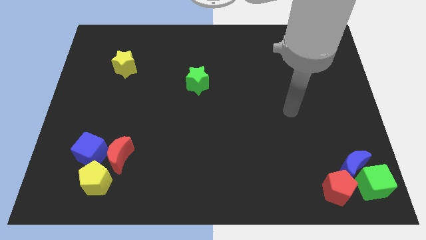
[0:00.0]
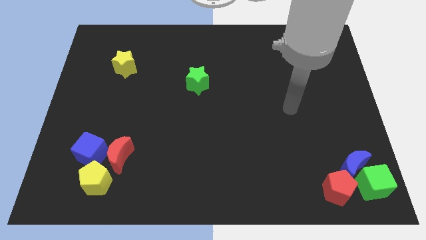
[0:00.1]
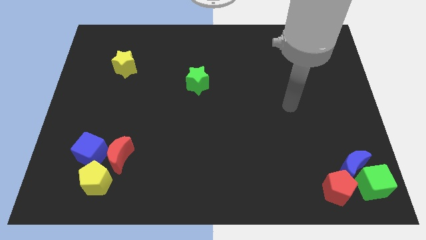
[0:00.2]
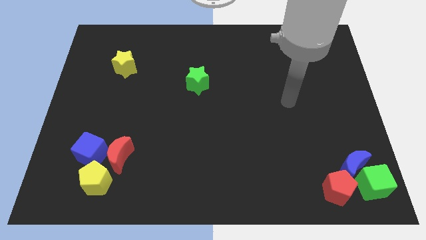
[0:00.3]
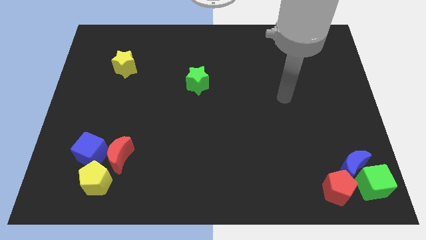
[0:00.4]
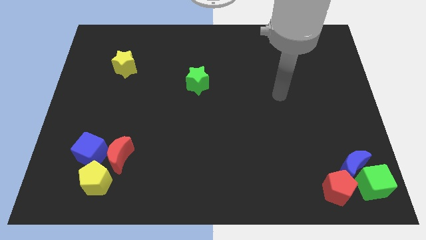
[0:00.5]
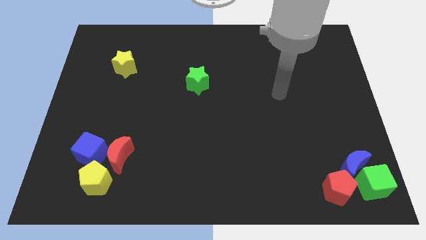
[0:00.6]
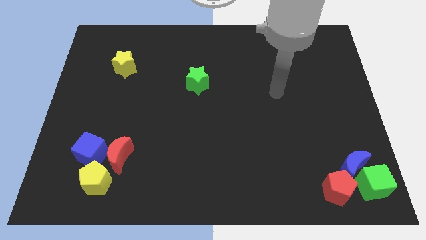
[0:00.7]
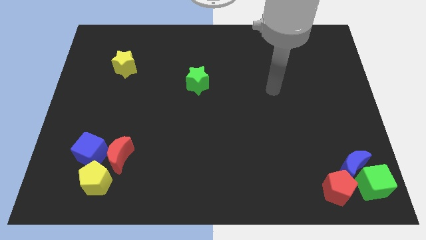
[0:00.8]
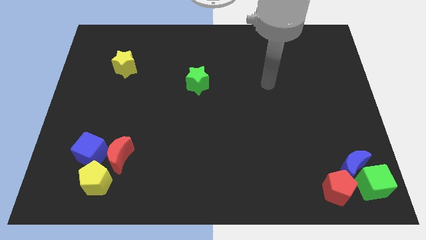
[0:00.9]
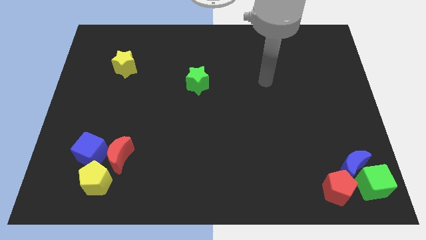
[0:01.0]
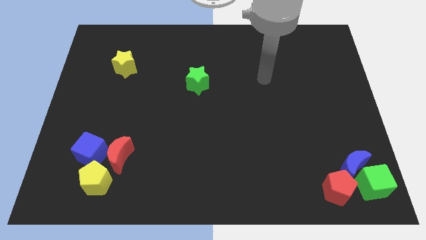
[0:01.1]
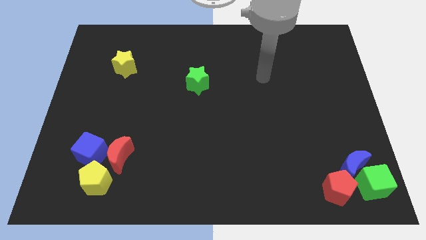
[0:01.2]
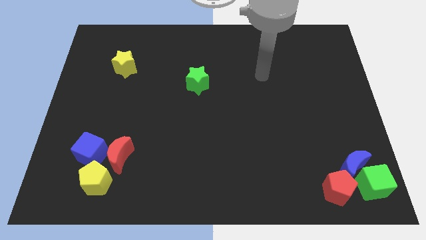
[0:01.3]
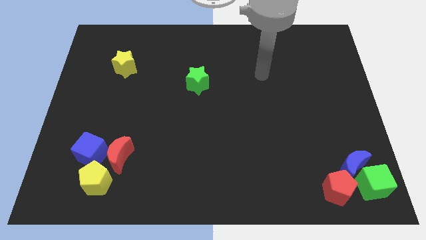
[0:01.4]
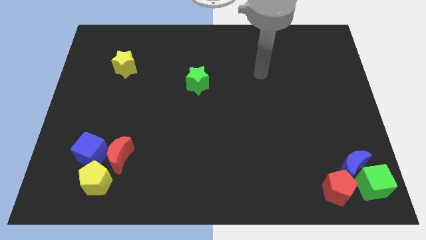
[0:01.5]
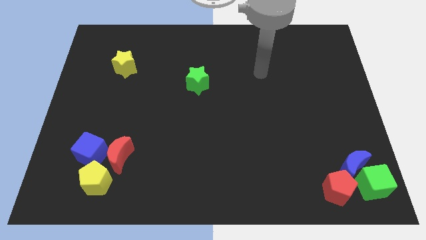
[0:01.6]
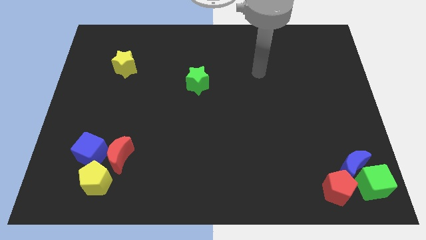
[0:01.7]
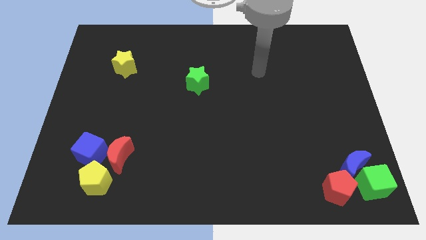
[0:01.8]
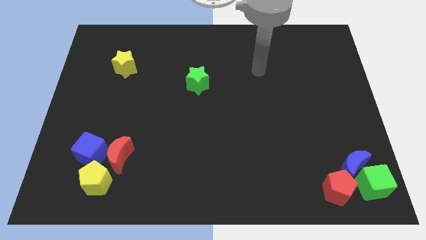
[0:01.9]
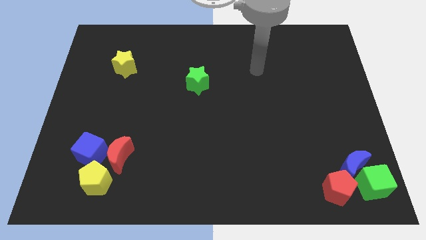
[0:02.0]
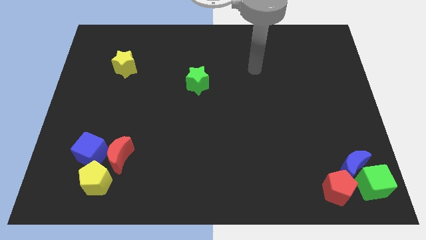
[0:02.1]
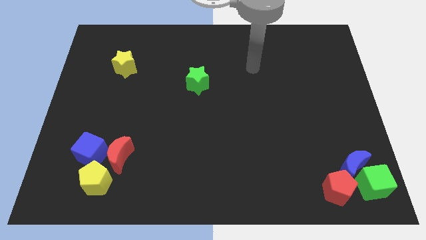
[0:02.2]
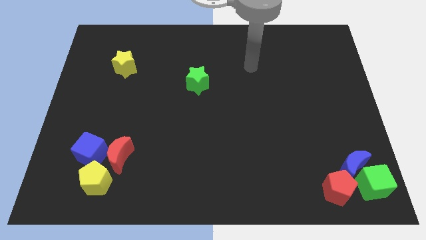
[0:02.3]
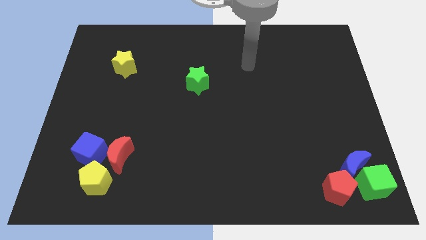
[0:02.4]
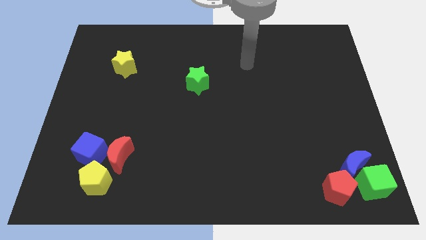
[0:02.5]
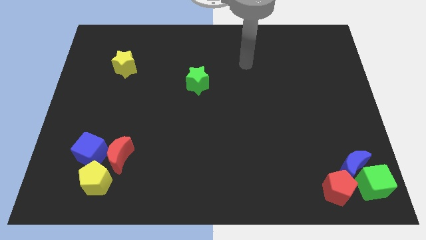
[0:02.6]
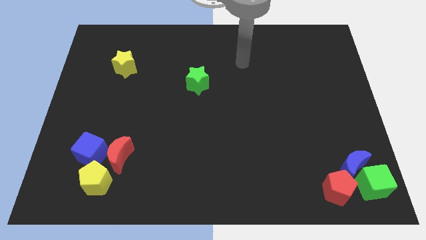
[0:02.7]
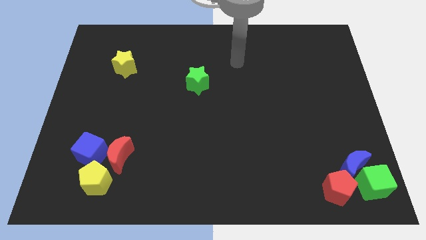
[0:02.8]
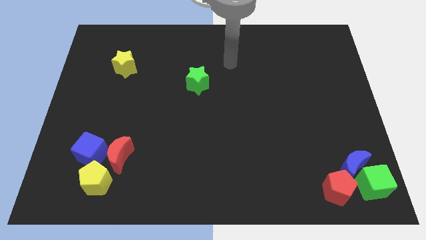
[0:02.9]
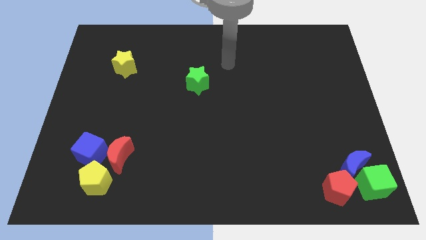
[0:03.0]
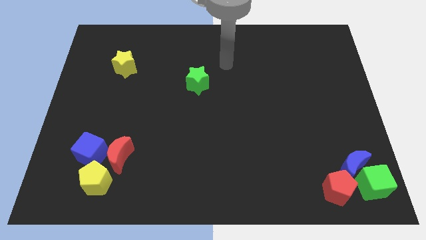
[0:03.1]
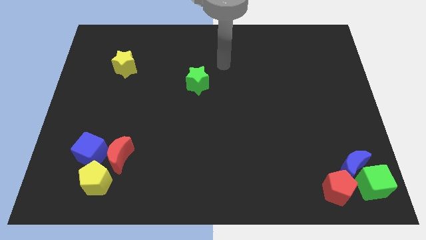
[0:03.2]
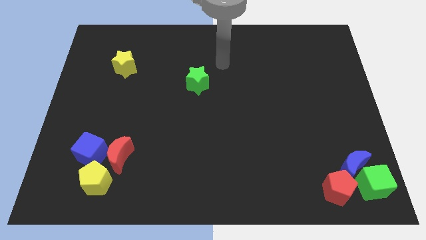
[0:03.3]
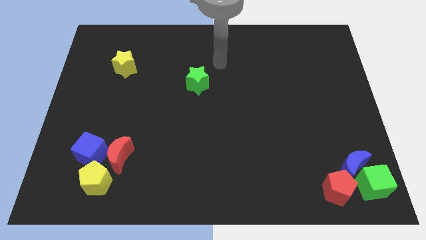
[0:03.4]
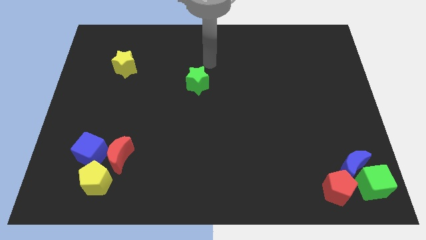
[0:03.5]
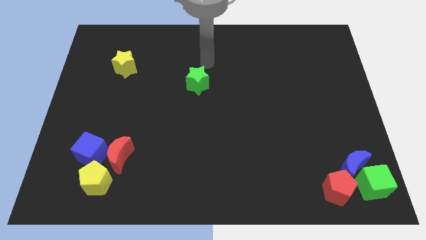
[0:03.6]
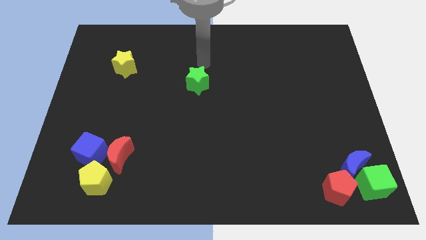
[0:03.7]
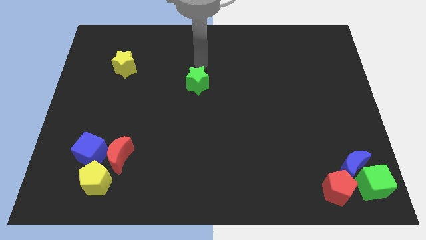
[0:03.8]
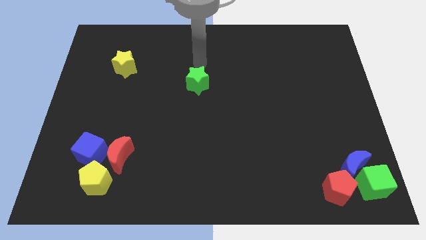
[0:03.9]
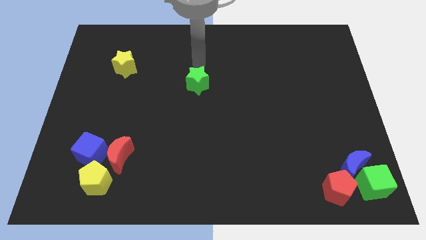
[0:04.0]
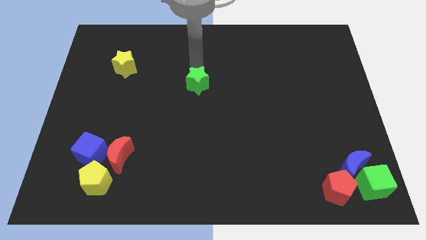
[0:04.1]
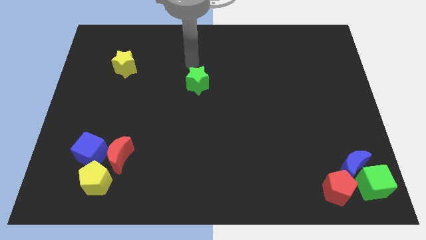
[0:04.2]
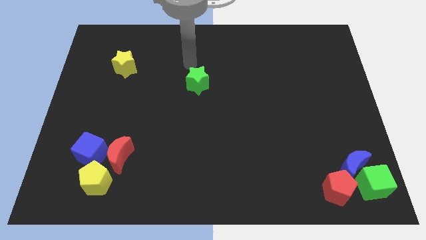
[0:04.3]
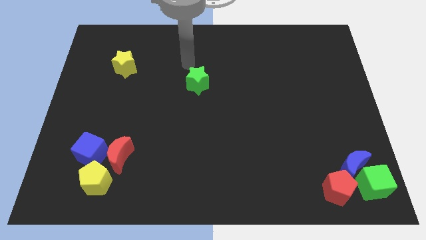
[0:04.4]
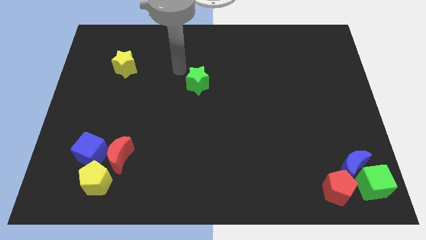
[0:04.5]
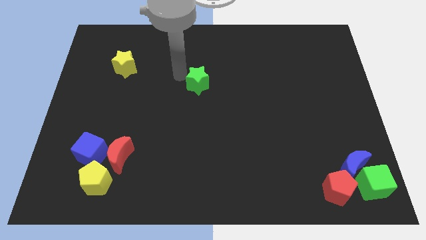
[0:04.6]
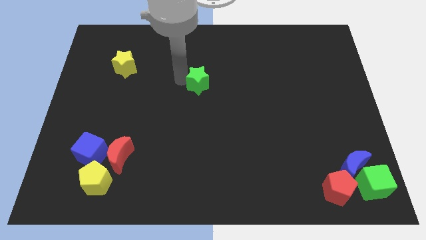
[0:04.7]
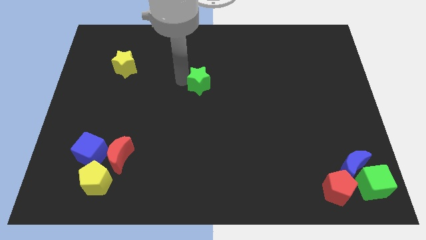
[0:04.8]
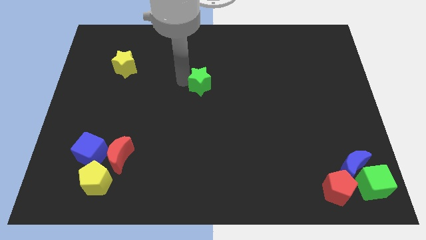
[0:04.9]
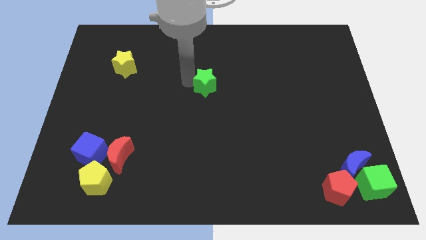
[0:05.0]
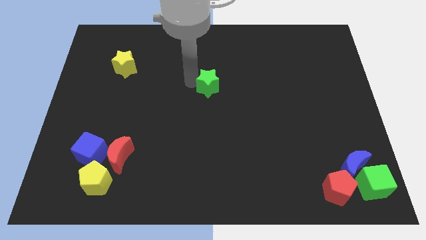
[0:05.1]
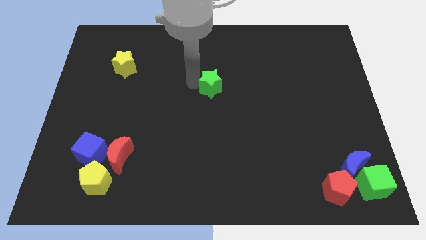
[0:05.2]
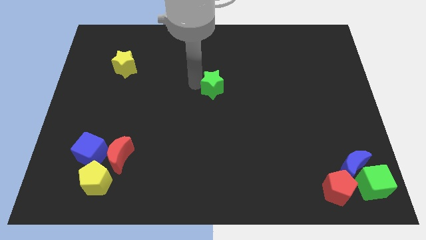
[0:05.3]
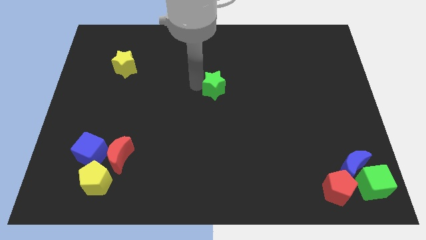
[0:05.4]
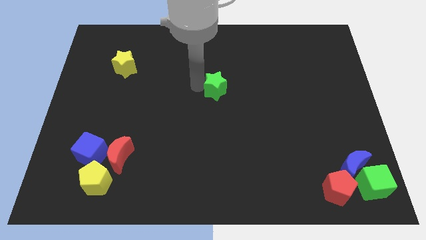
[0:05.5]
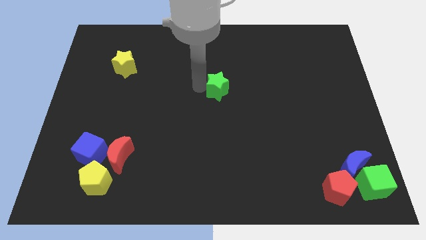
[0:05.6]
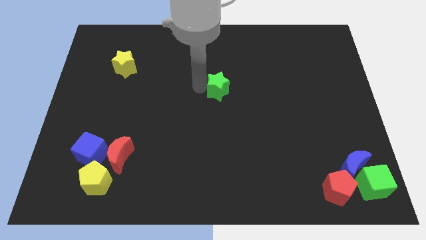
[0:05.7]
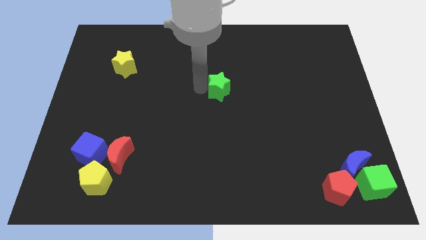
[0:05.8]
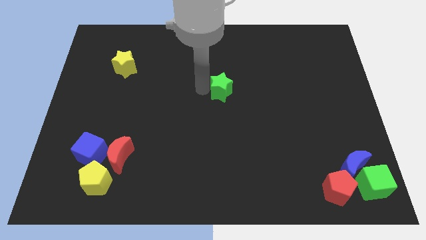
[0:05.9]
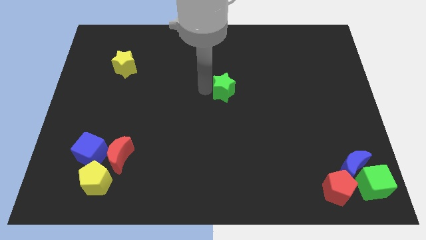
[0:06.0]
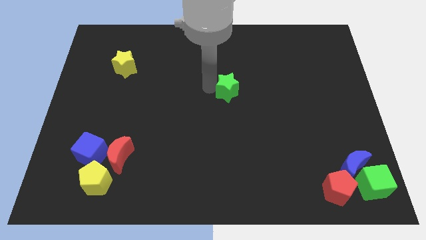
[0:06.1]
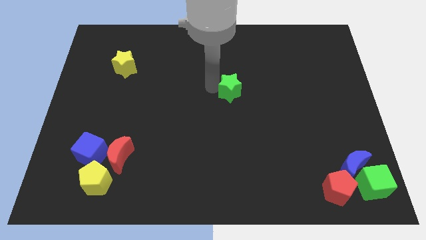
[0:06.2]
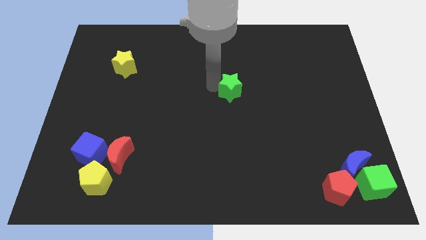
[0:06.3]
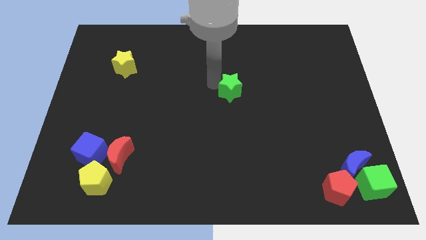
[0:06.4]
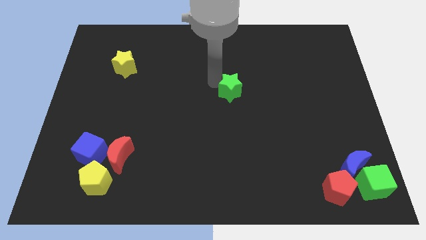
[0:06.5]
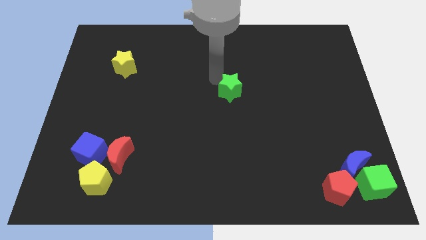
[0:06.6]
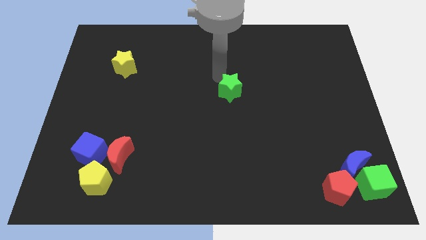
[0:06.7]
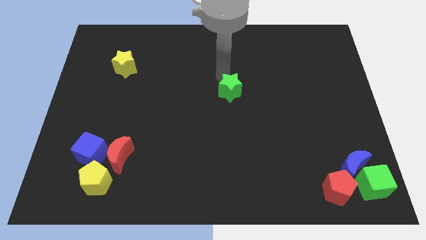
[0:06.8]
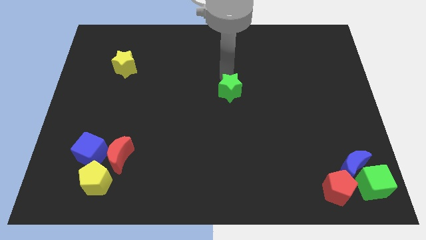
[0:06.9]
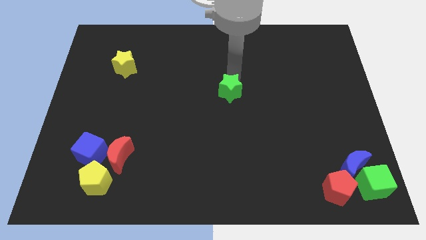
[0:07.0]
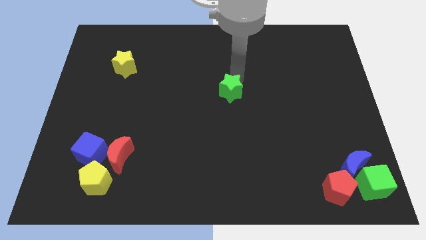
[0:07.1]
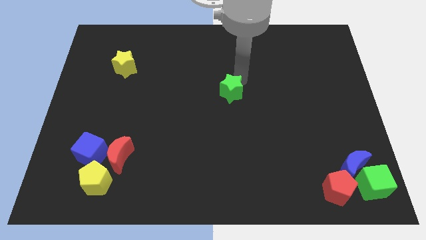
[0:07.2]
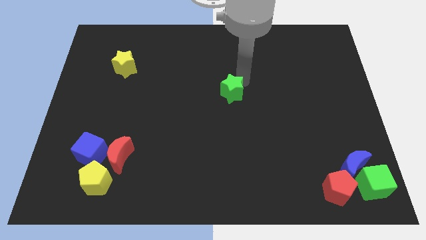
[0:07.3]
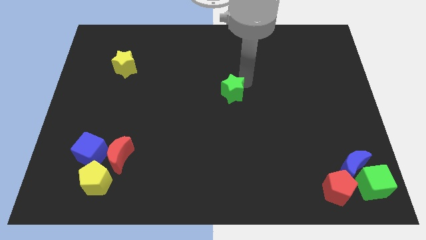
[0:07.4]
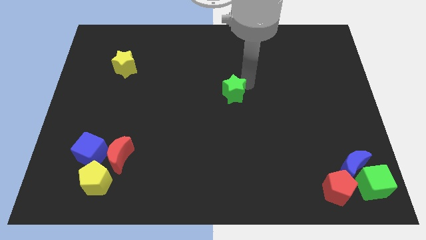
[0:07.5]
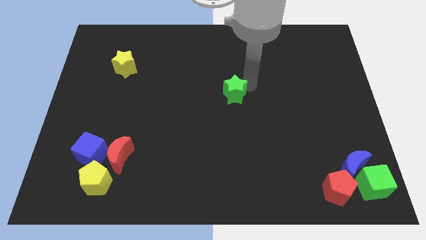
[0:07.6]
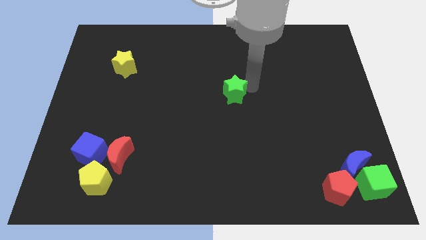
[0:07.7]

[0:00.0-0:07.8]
push the green star to the bottom of the board

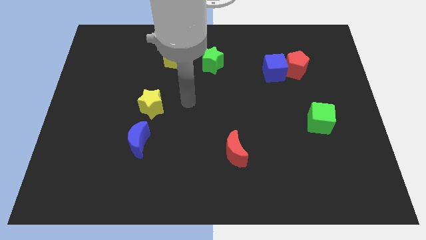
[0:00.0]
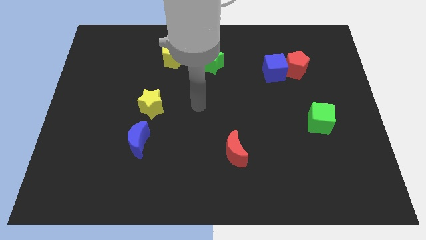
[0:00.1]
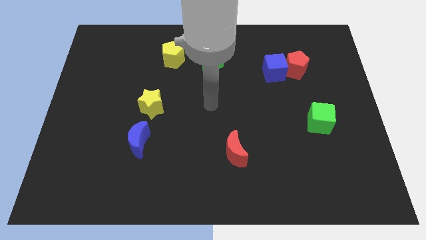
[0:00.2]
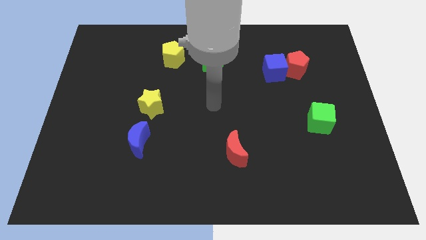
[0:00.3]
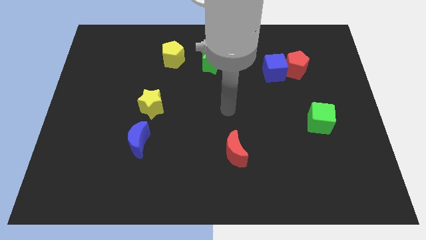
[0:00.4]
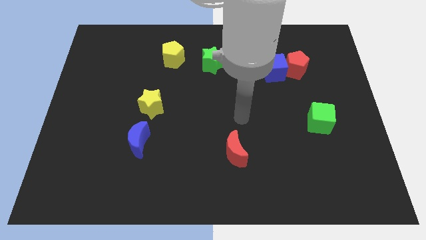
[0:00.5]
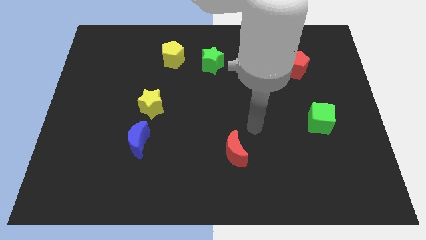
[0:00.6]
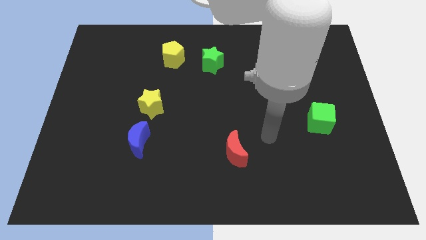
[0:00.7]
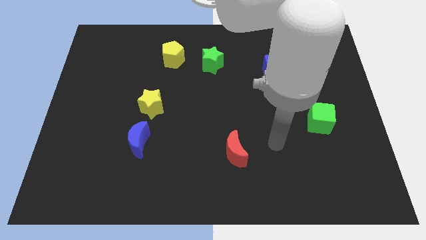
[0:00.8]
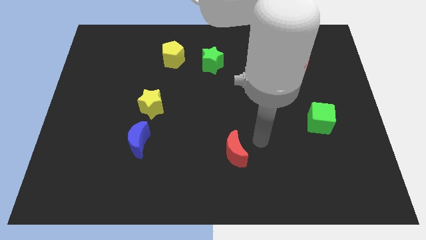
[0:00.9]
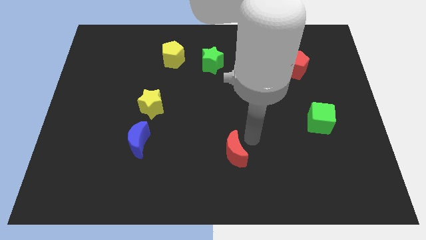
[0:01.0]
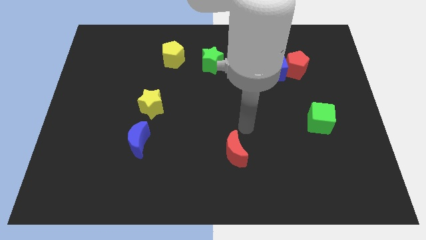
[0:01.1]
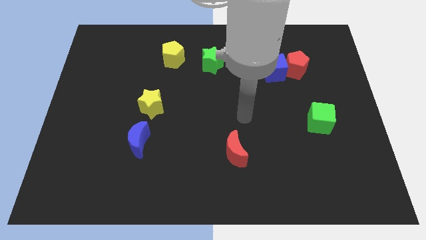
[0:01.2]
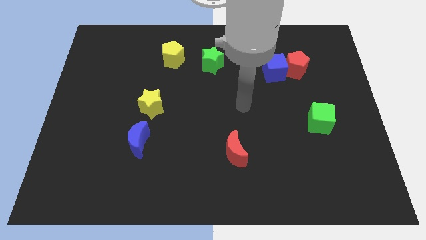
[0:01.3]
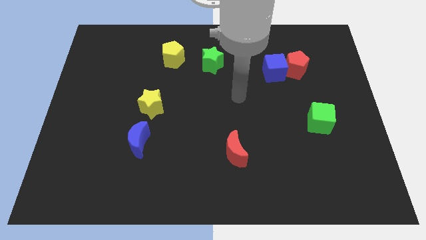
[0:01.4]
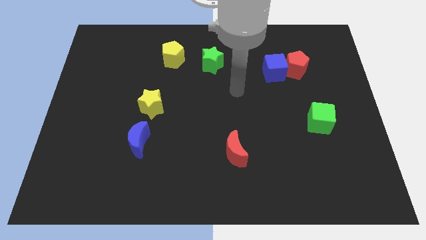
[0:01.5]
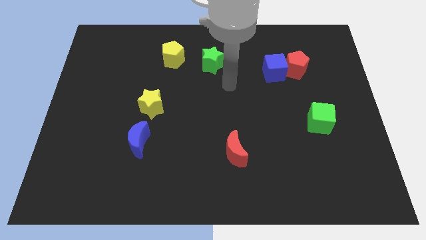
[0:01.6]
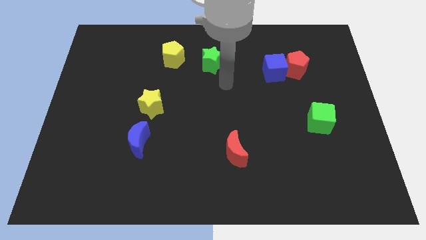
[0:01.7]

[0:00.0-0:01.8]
move your arm around on the board
